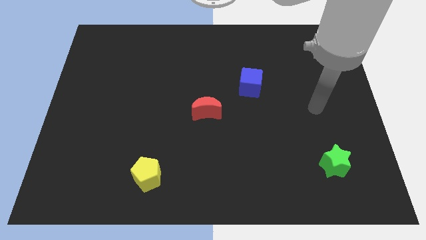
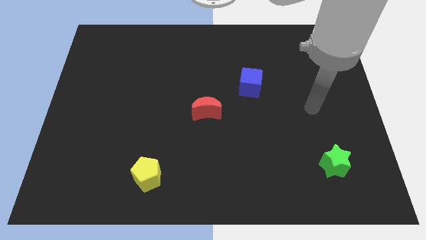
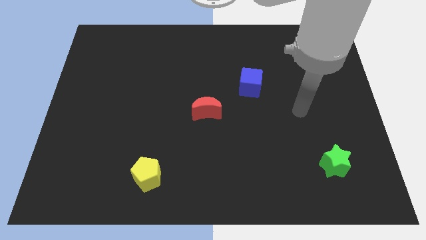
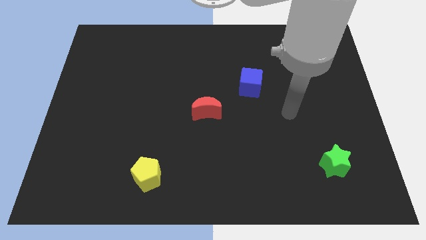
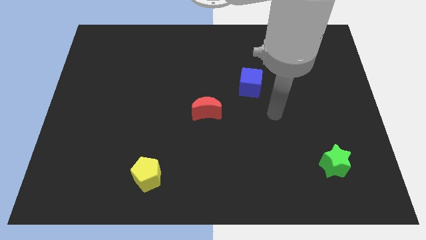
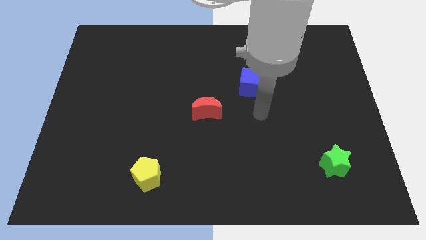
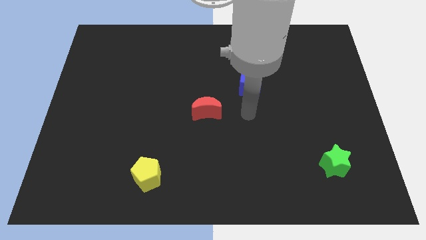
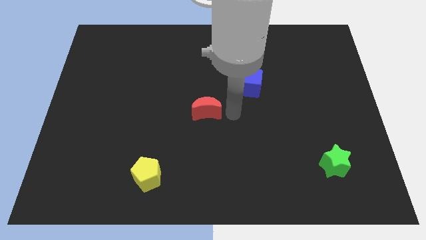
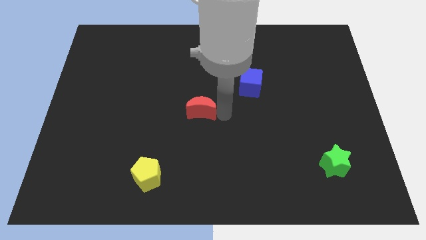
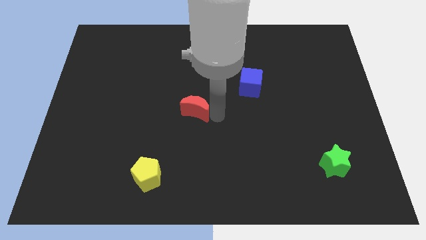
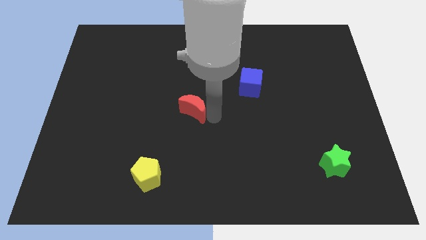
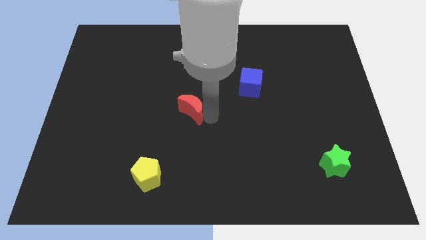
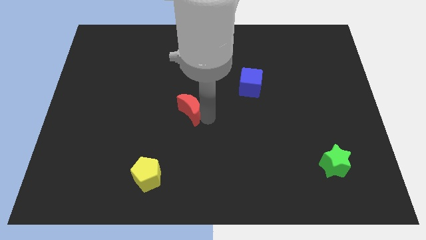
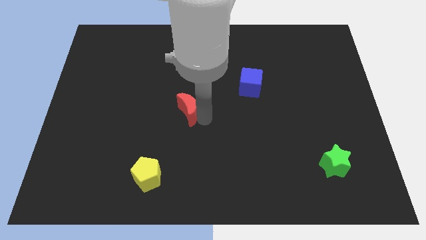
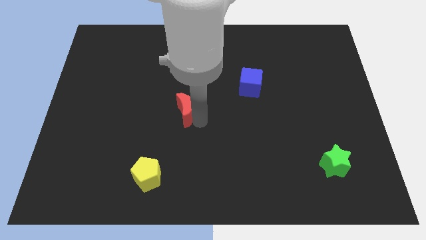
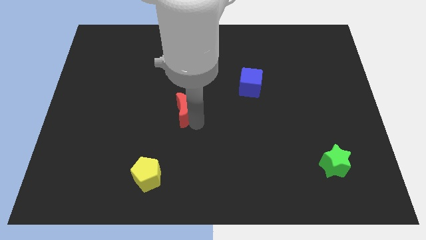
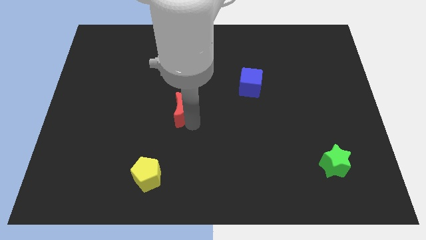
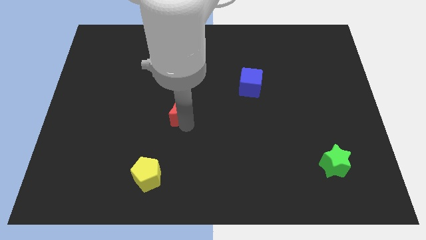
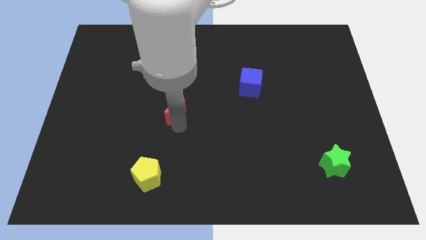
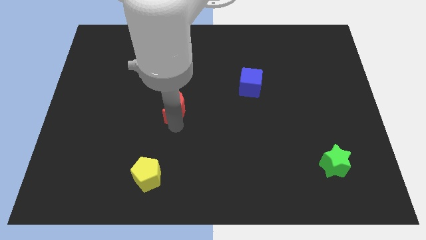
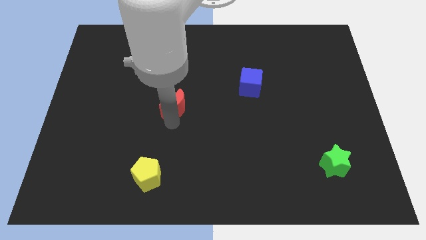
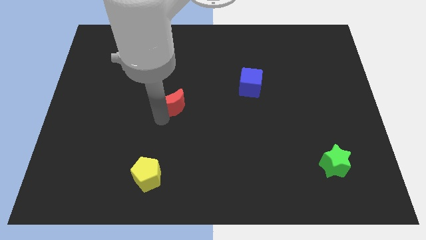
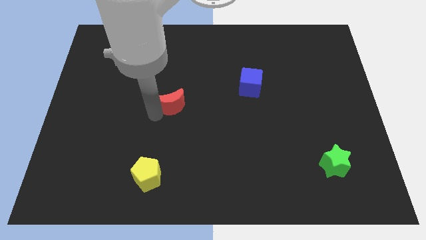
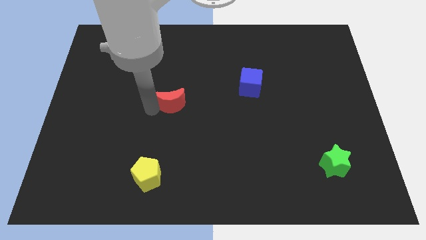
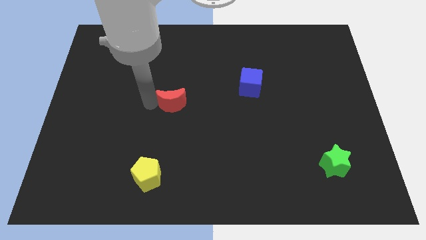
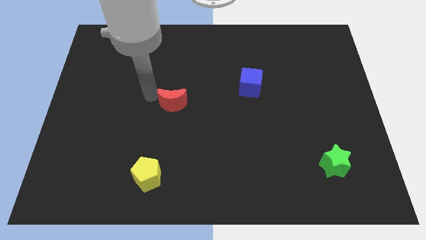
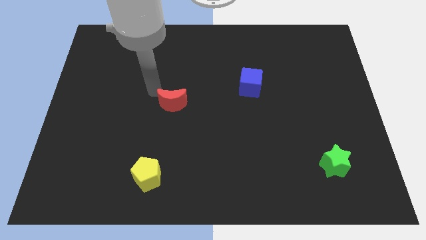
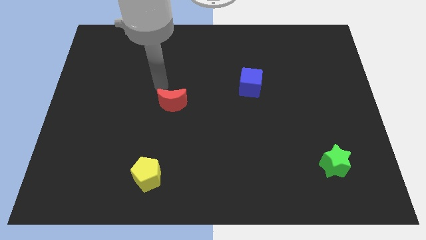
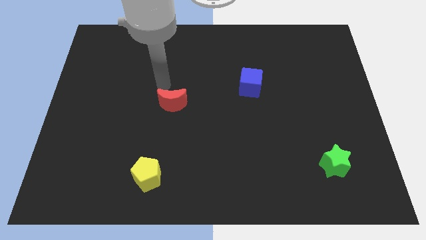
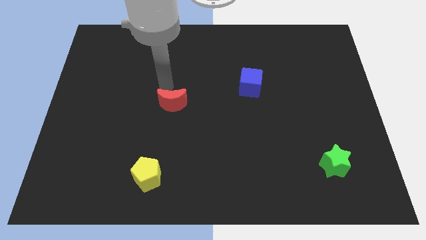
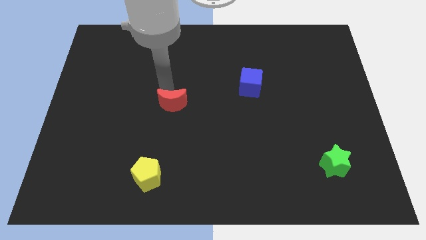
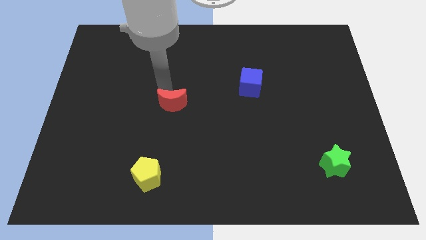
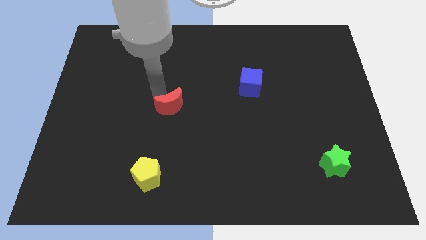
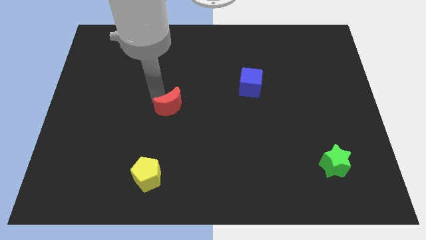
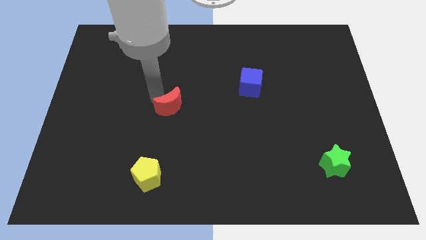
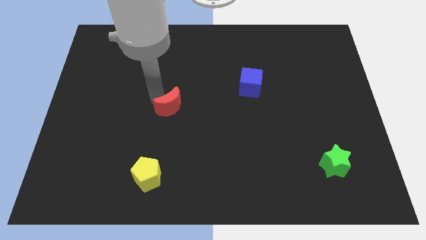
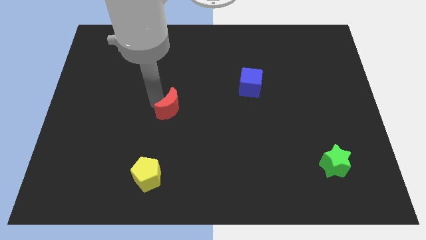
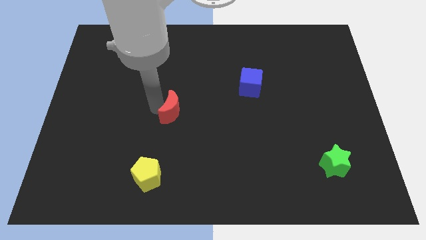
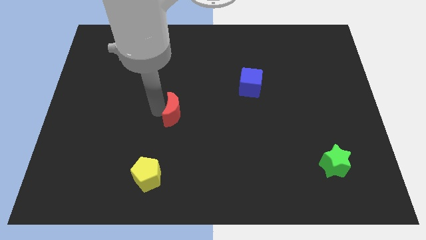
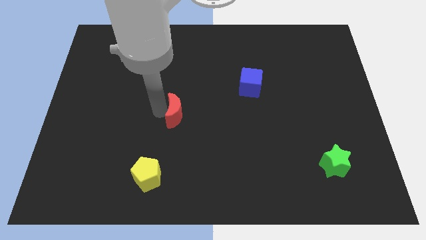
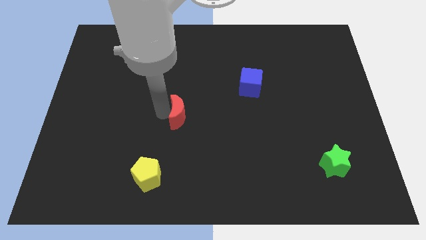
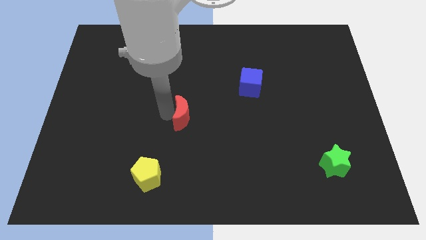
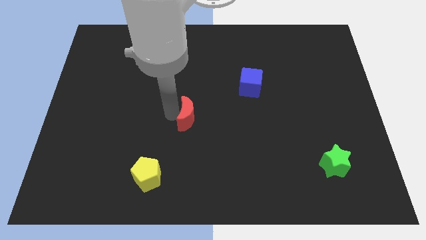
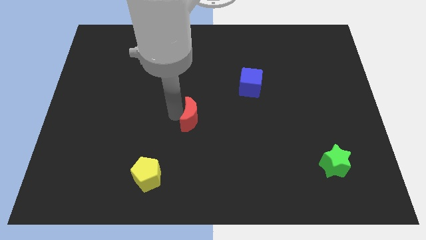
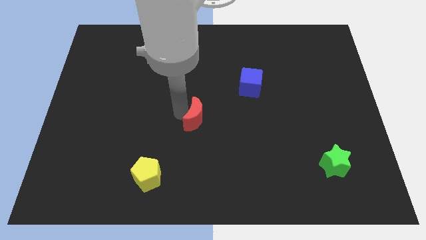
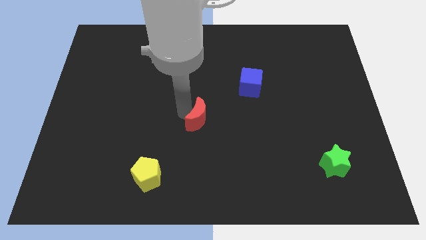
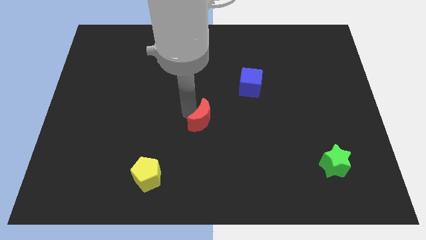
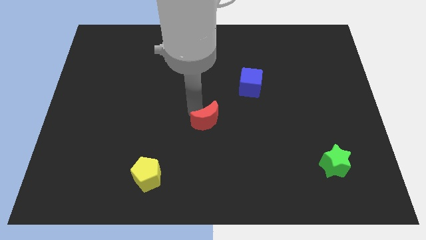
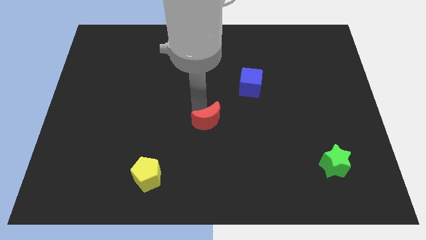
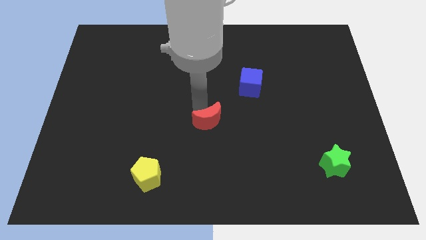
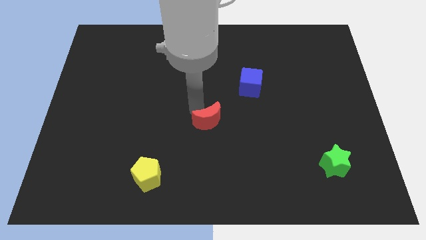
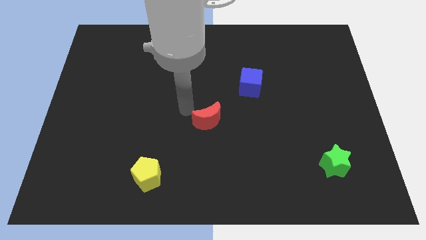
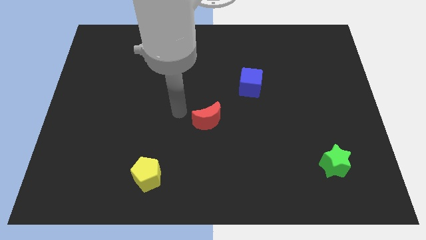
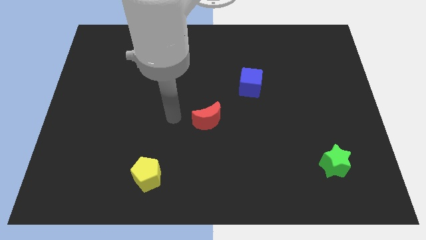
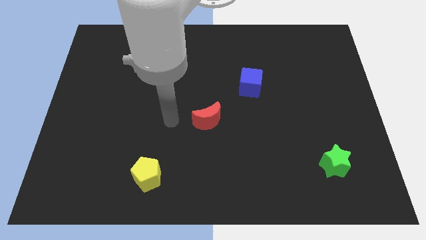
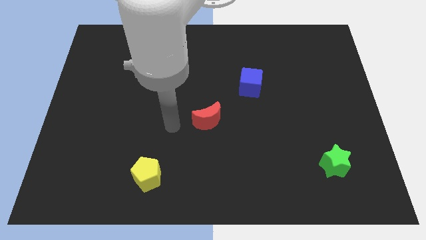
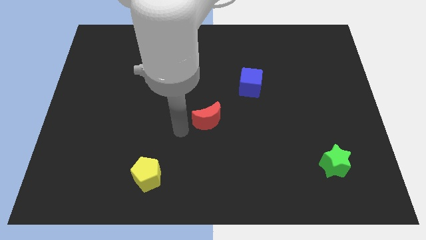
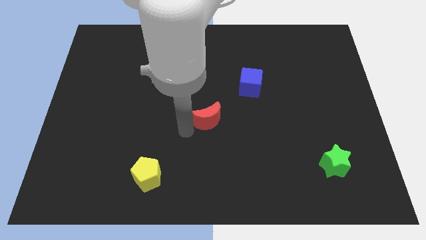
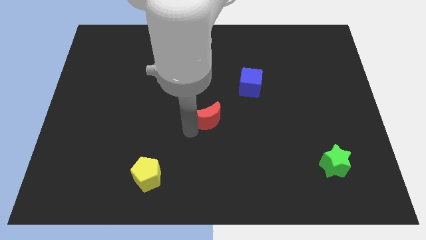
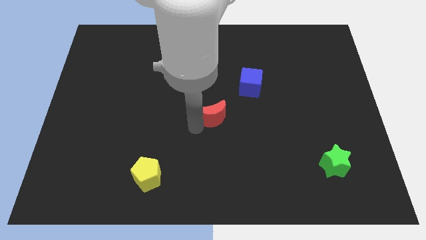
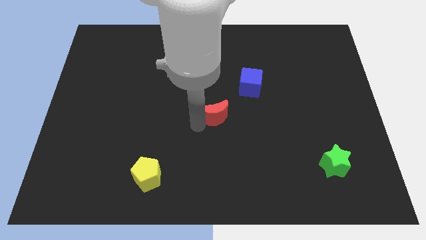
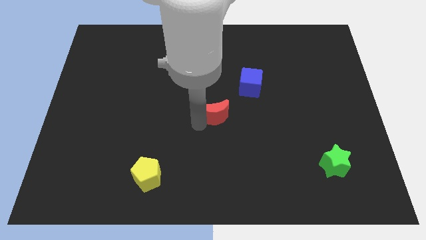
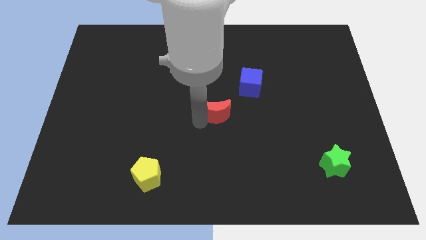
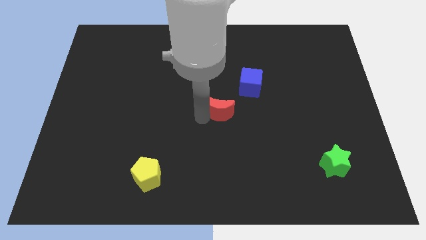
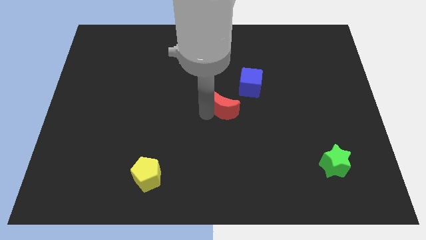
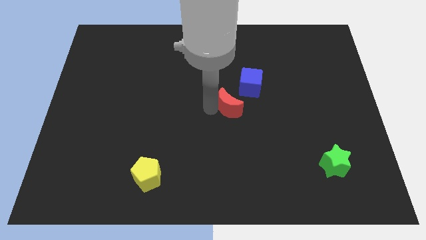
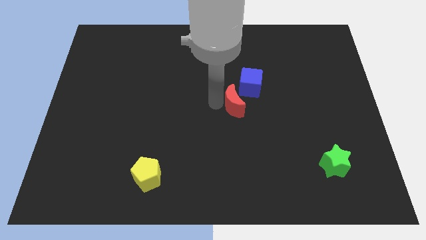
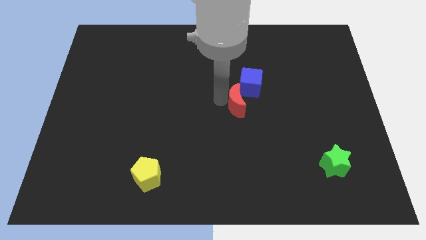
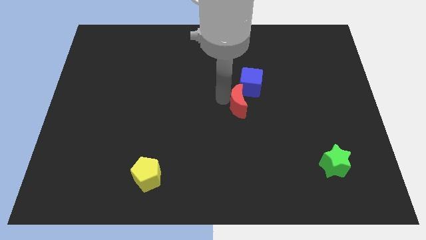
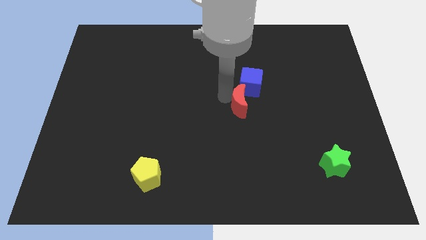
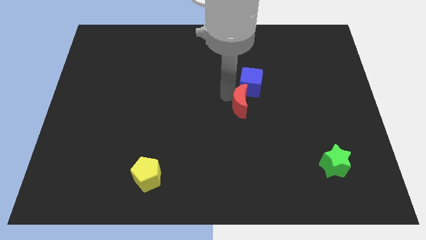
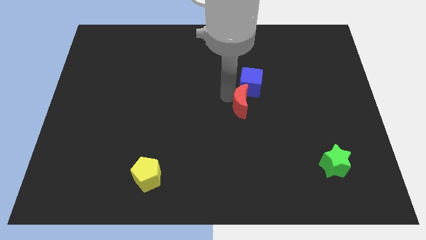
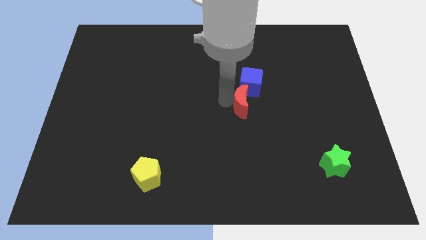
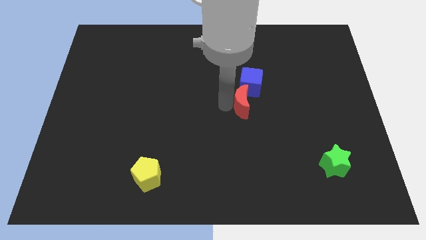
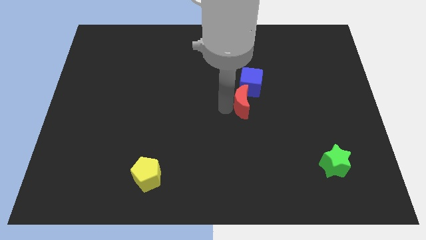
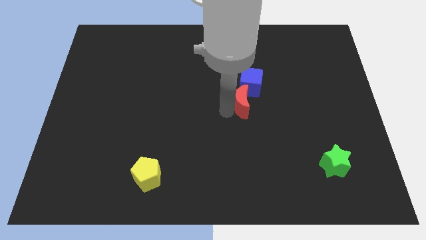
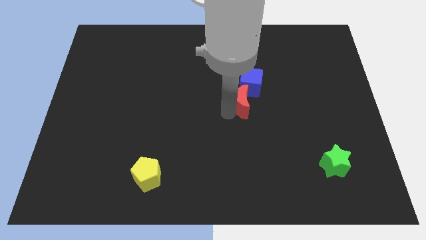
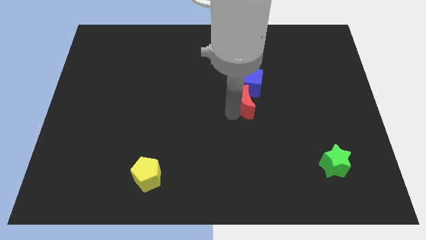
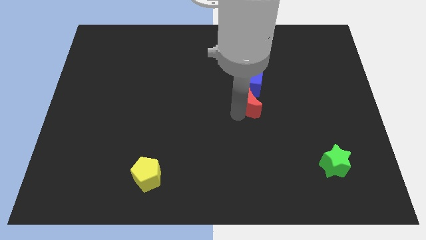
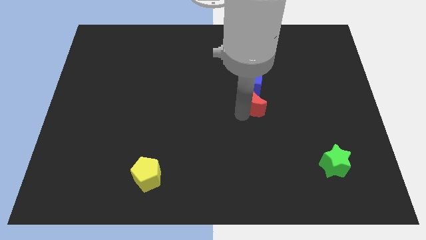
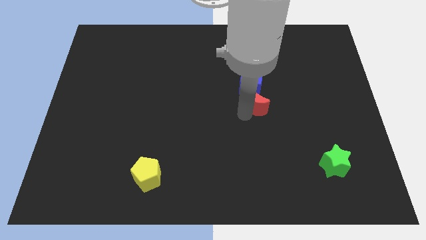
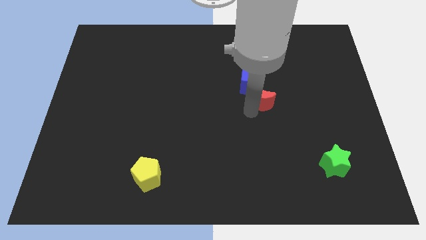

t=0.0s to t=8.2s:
move the red moon close to the blue cube

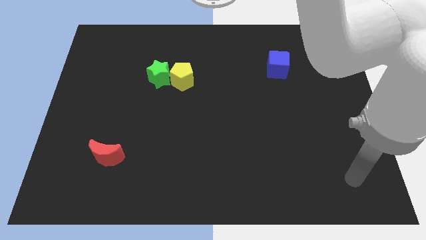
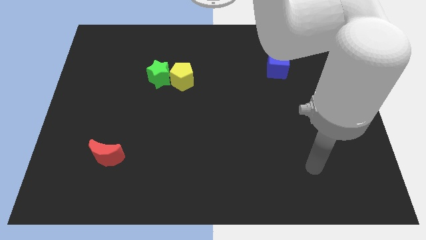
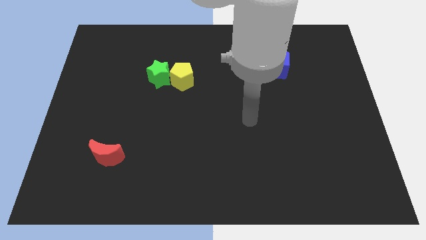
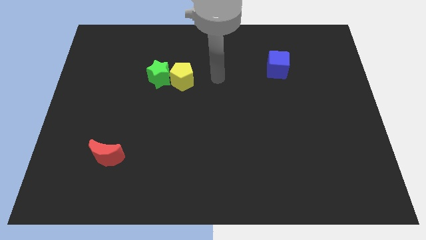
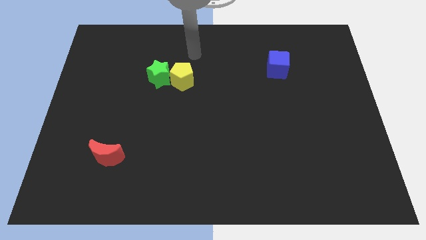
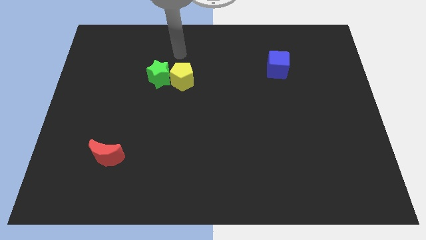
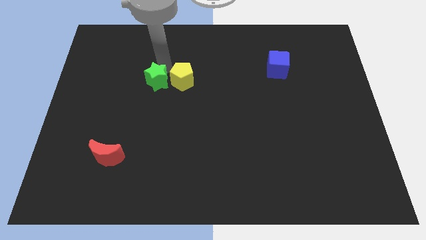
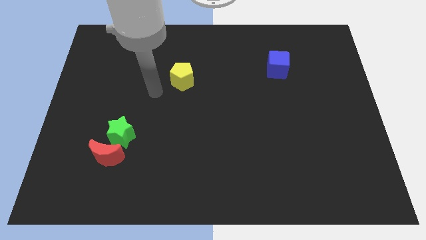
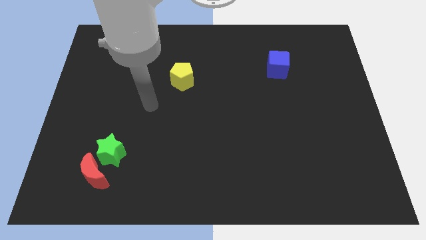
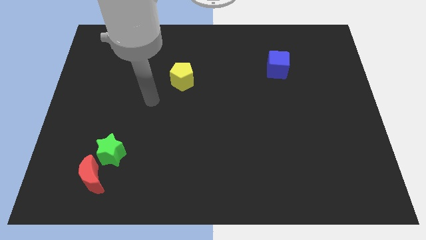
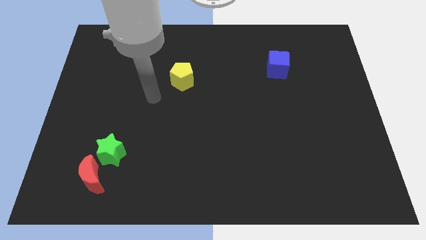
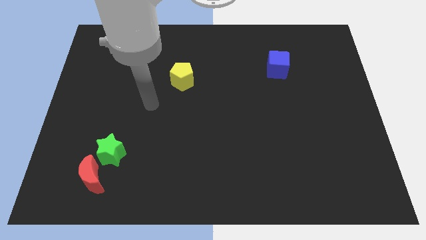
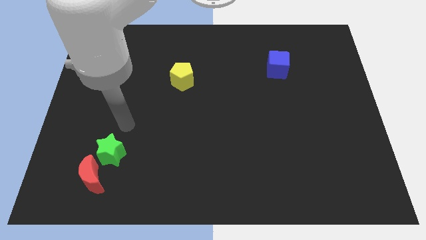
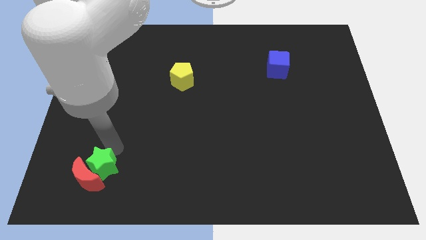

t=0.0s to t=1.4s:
put the green star to the moon
